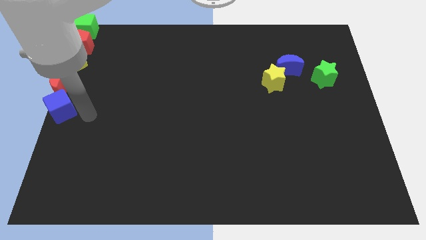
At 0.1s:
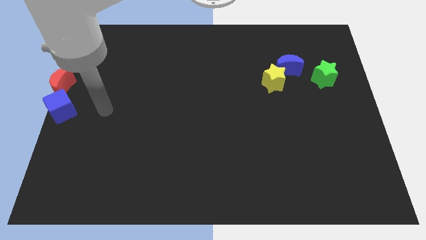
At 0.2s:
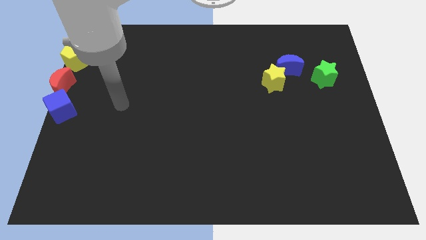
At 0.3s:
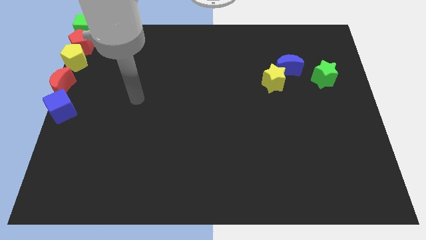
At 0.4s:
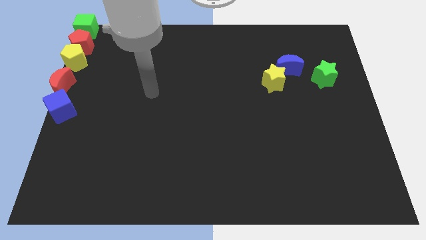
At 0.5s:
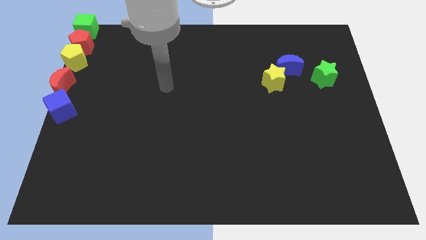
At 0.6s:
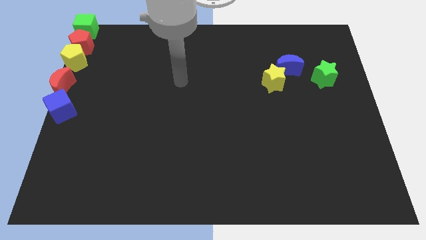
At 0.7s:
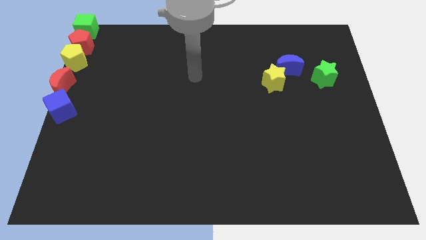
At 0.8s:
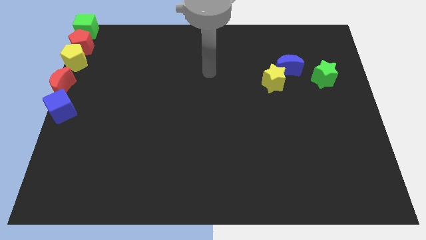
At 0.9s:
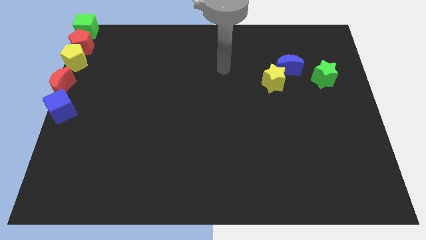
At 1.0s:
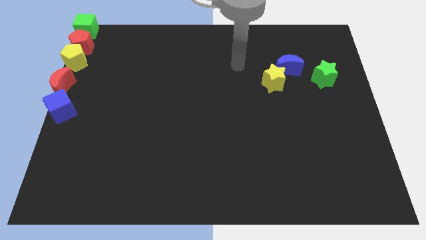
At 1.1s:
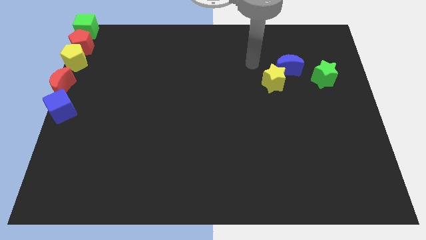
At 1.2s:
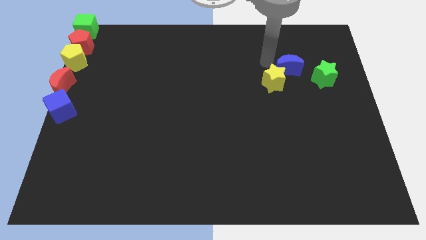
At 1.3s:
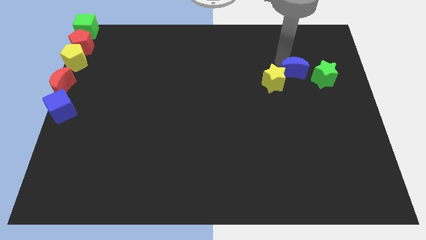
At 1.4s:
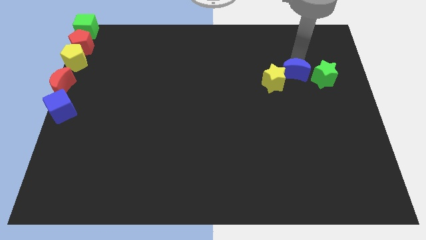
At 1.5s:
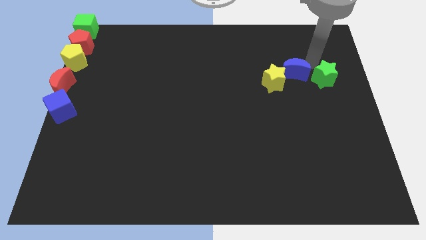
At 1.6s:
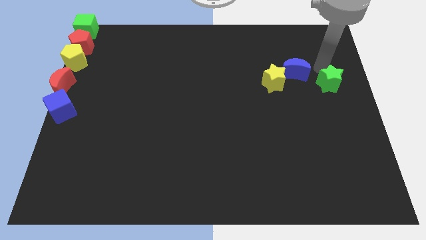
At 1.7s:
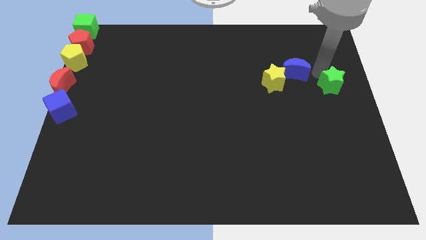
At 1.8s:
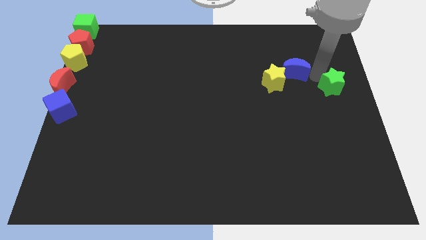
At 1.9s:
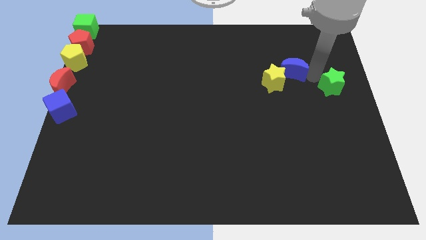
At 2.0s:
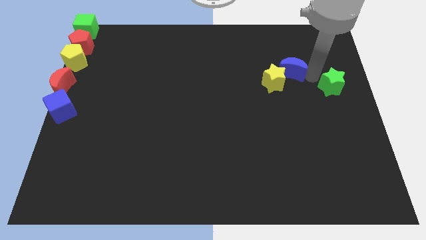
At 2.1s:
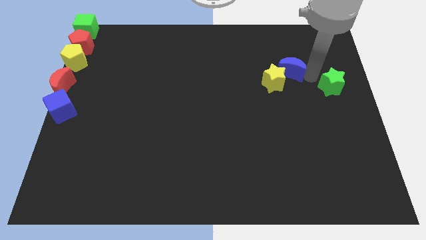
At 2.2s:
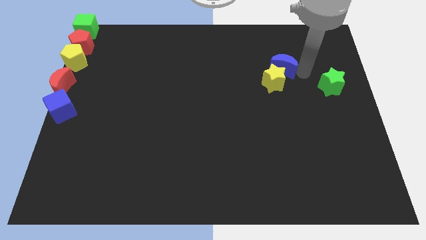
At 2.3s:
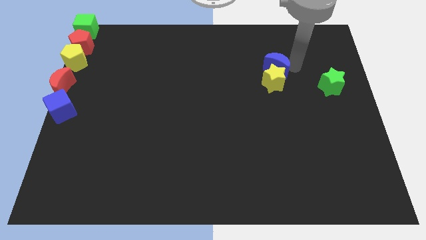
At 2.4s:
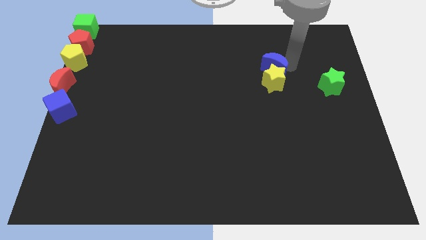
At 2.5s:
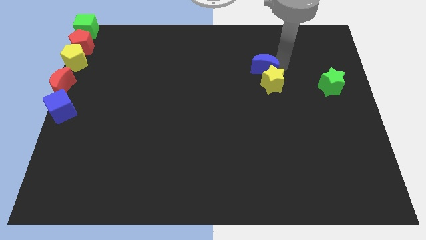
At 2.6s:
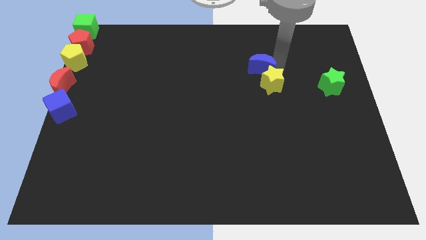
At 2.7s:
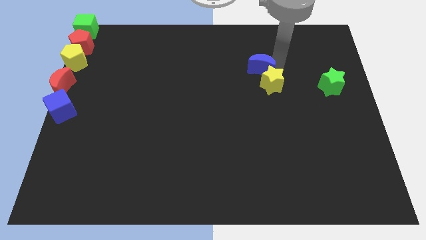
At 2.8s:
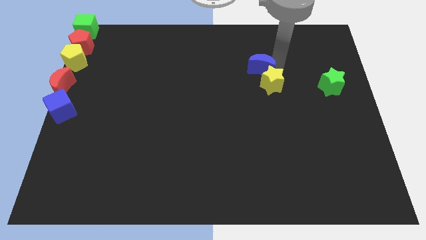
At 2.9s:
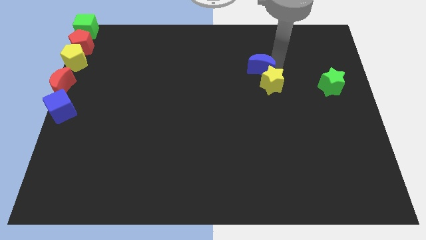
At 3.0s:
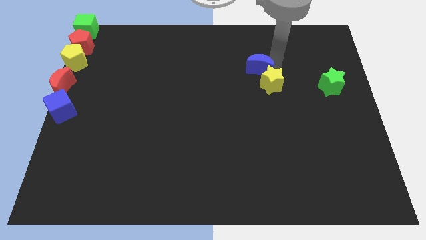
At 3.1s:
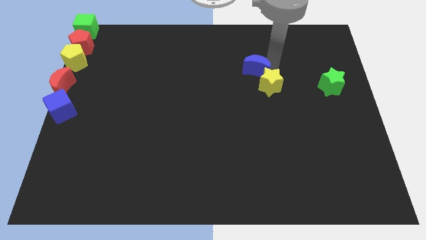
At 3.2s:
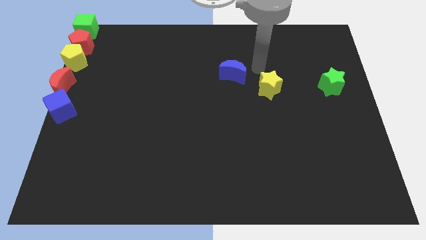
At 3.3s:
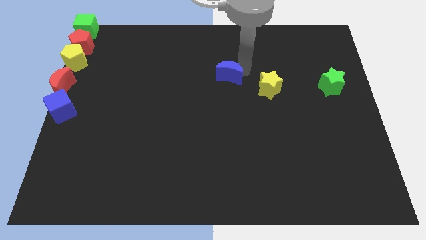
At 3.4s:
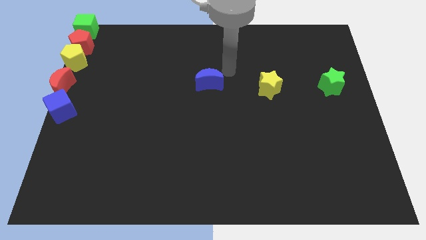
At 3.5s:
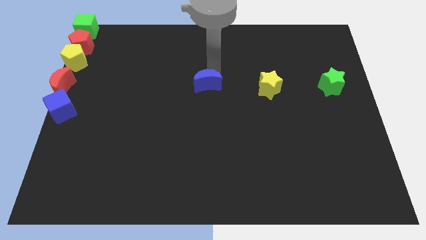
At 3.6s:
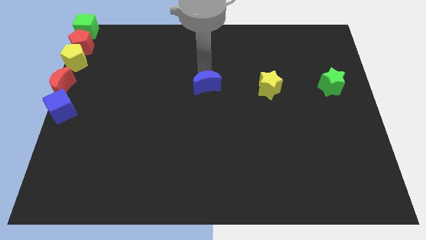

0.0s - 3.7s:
push the blue crescent to the left of the yellow star

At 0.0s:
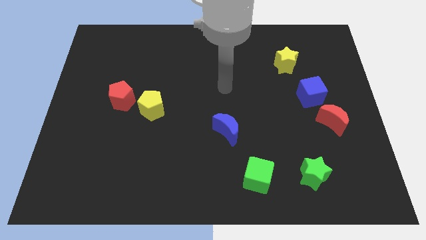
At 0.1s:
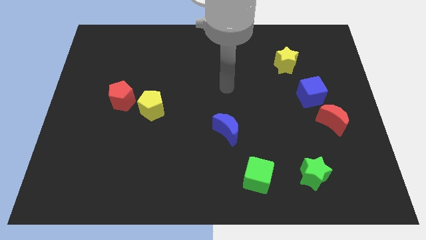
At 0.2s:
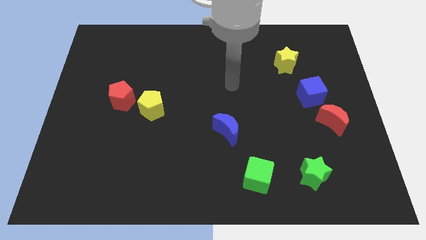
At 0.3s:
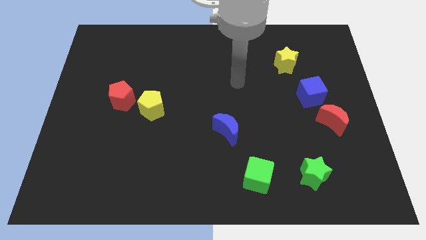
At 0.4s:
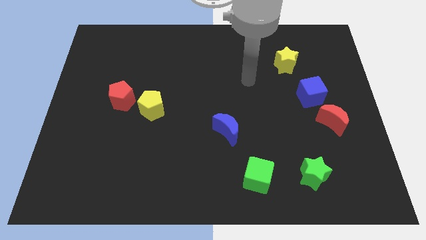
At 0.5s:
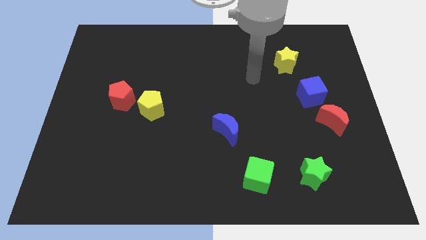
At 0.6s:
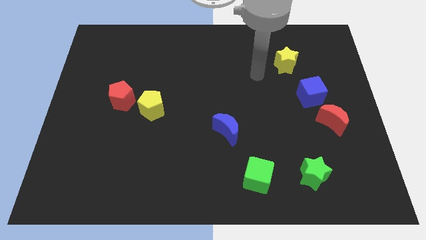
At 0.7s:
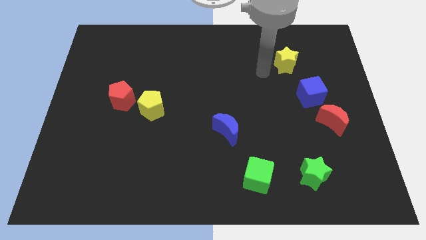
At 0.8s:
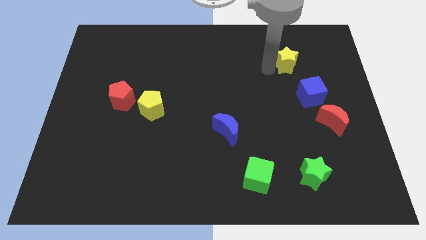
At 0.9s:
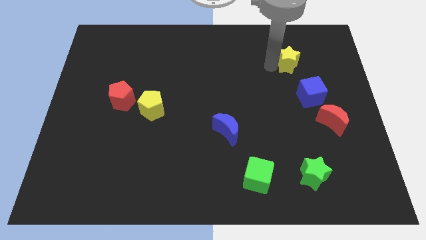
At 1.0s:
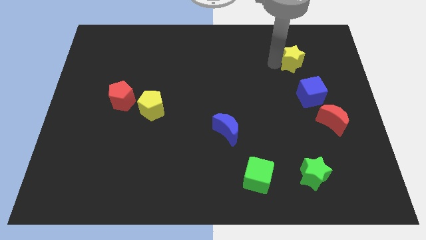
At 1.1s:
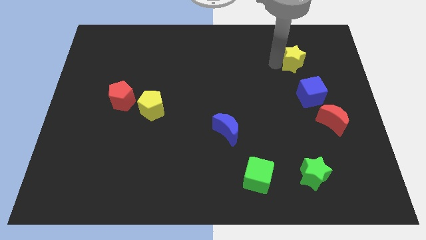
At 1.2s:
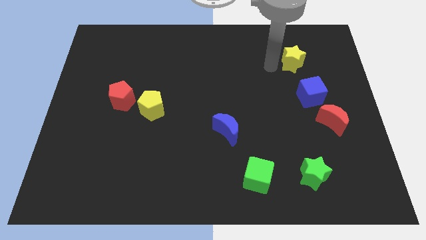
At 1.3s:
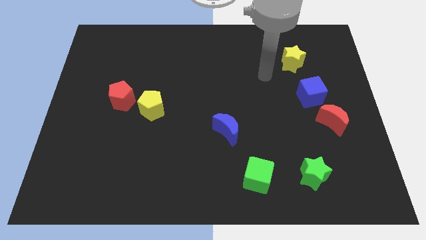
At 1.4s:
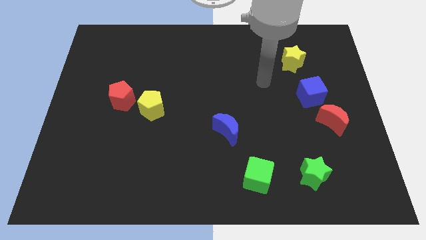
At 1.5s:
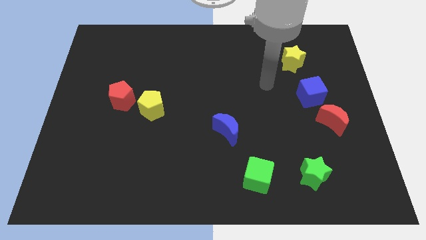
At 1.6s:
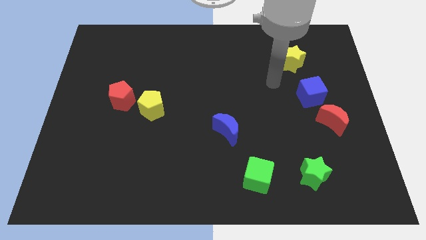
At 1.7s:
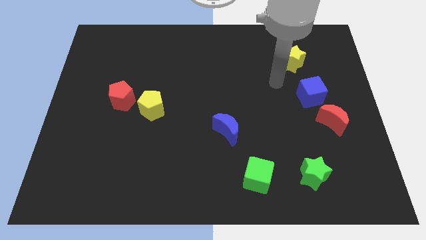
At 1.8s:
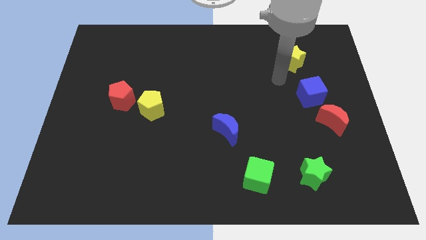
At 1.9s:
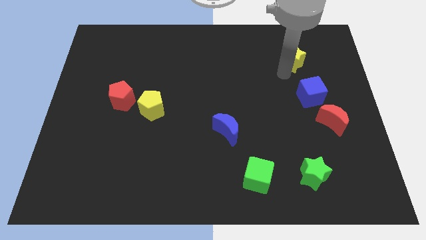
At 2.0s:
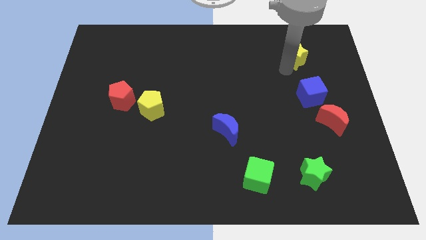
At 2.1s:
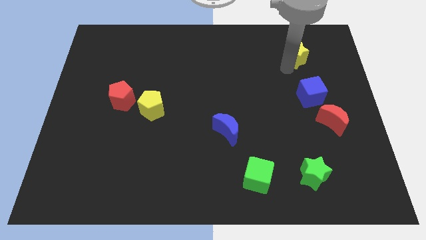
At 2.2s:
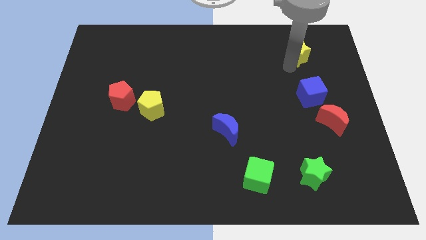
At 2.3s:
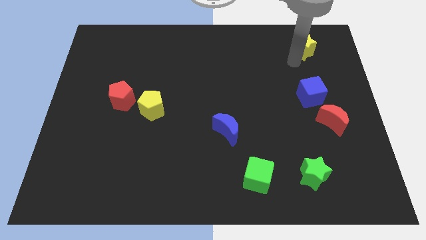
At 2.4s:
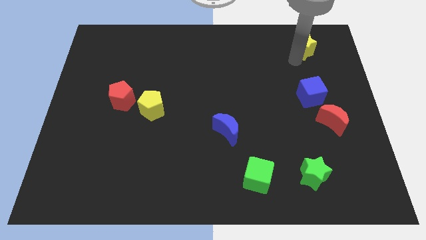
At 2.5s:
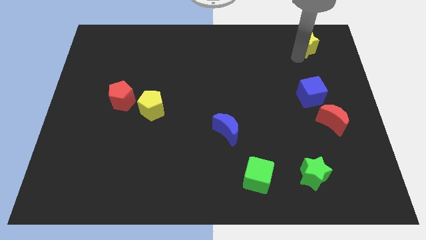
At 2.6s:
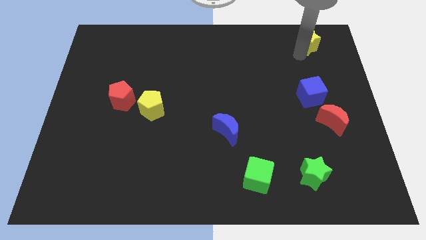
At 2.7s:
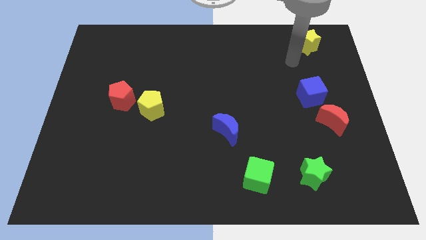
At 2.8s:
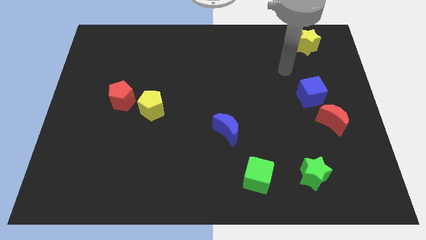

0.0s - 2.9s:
push the yellow star towards the top right corner of the board

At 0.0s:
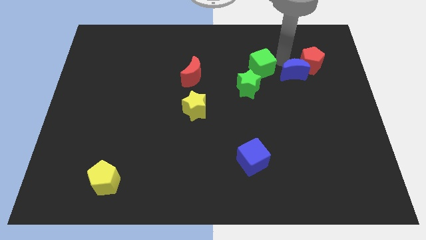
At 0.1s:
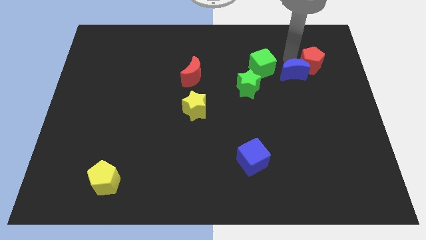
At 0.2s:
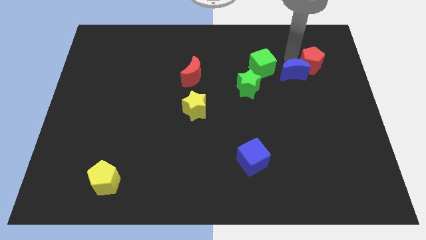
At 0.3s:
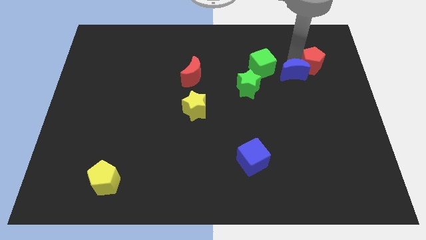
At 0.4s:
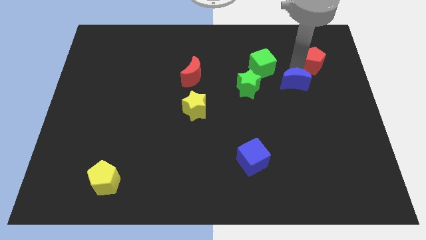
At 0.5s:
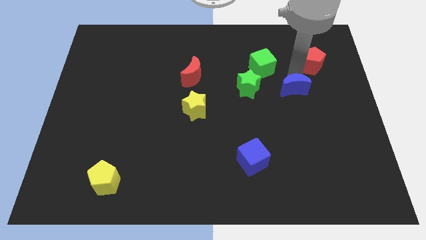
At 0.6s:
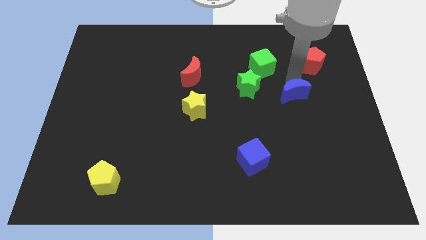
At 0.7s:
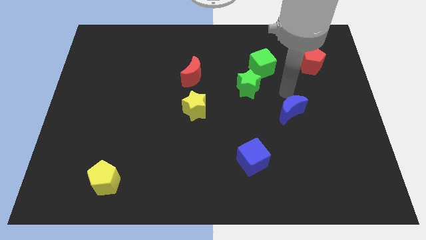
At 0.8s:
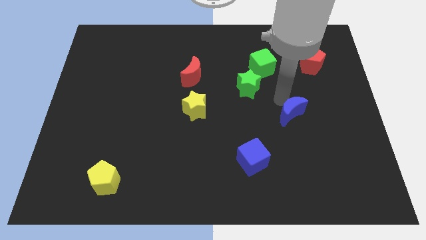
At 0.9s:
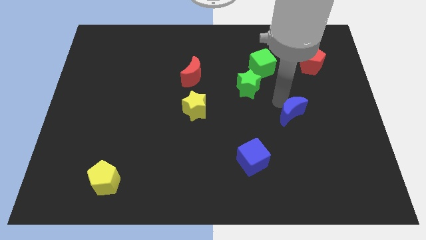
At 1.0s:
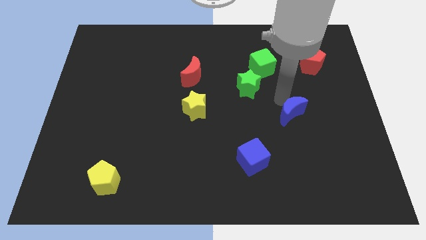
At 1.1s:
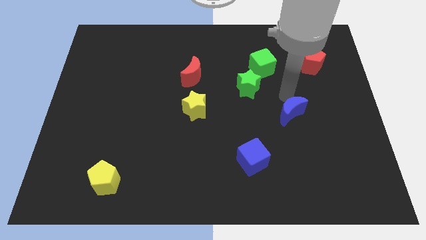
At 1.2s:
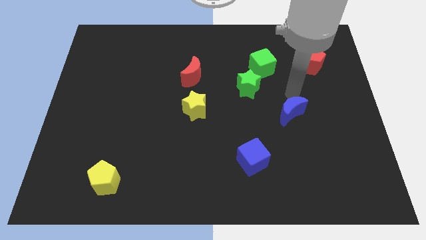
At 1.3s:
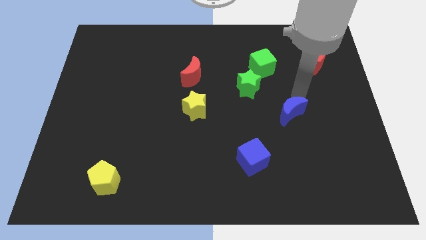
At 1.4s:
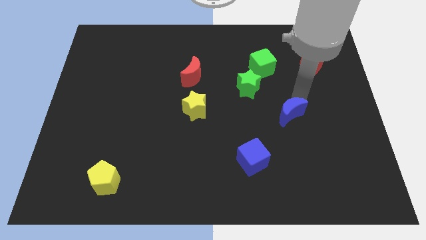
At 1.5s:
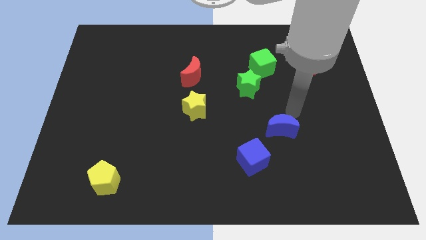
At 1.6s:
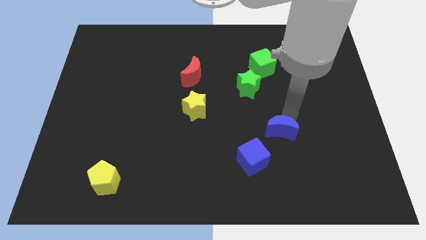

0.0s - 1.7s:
separate the blue crescent from the red pentagon

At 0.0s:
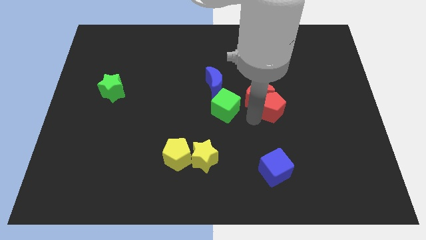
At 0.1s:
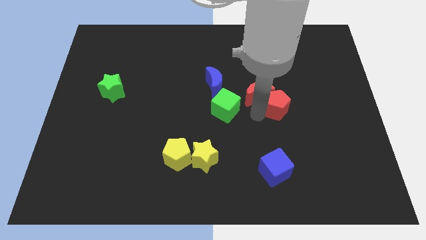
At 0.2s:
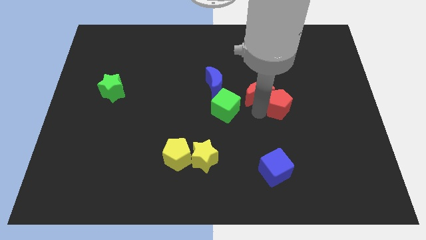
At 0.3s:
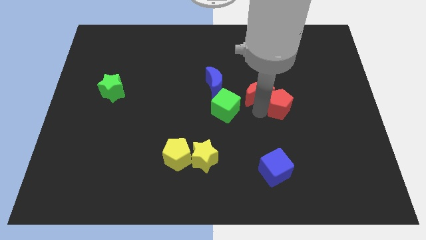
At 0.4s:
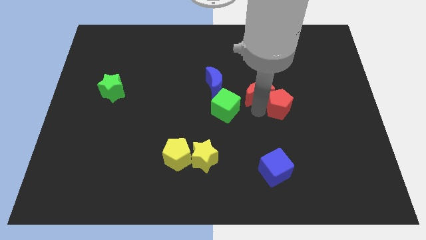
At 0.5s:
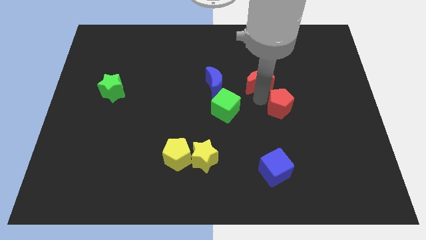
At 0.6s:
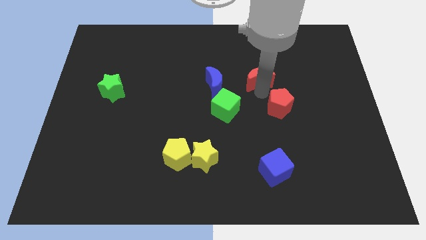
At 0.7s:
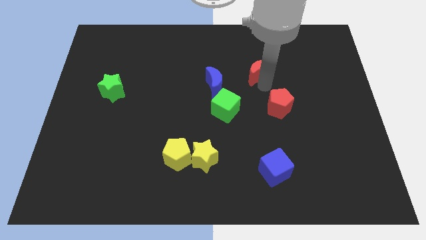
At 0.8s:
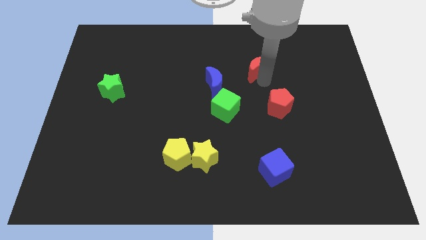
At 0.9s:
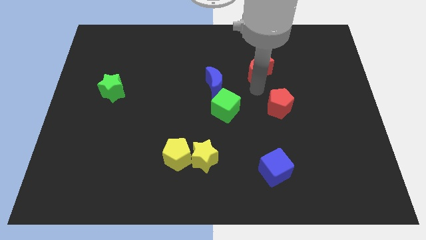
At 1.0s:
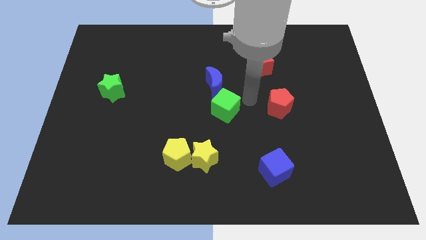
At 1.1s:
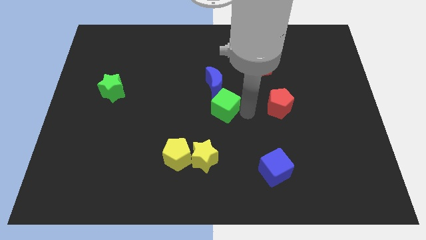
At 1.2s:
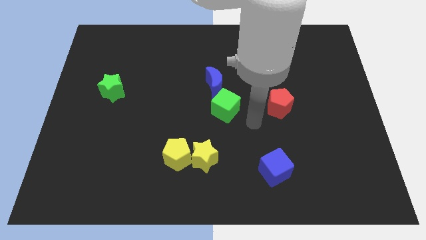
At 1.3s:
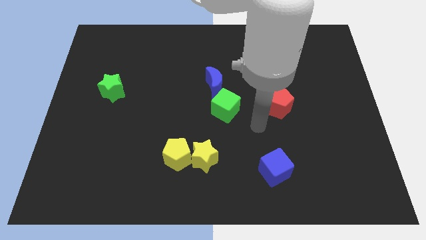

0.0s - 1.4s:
separate the red crescent from the red pentagon
